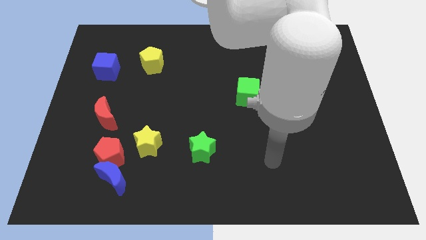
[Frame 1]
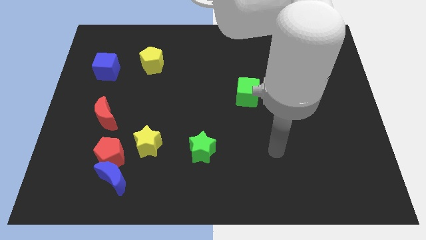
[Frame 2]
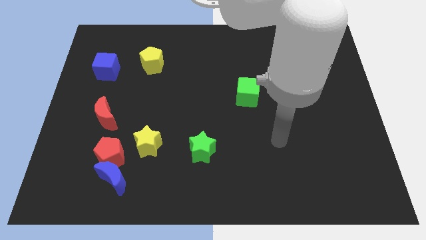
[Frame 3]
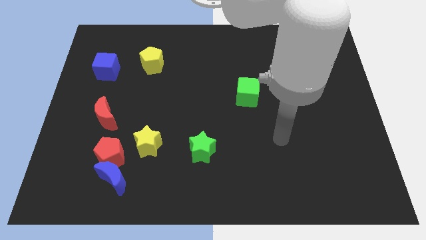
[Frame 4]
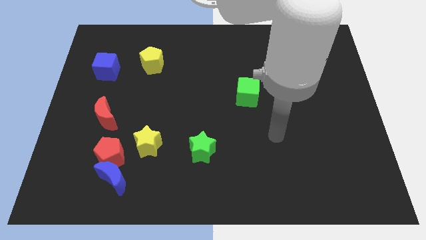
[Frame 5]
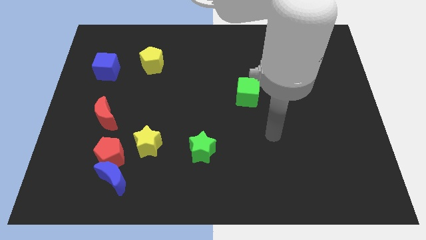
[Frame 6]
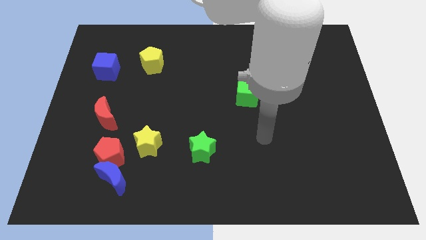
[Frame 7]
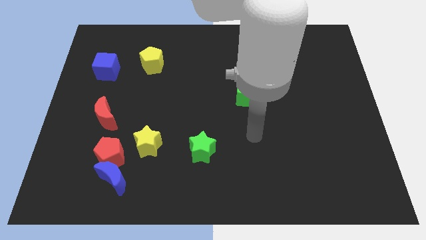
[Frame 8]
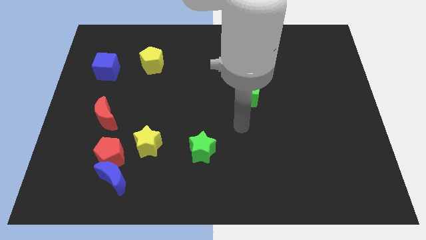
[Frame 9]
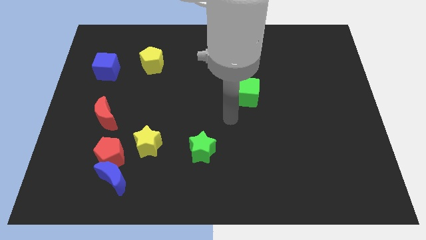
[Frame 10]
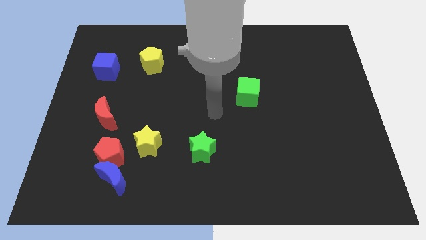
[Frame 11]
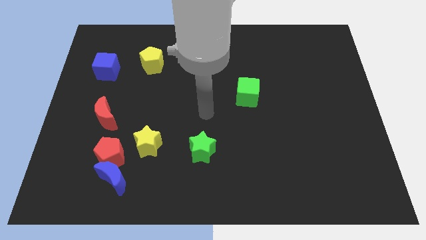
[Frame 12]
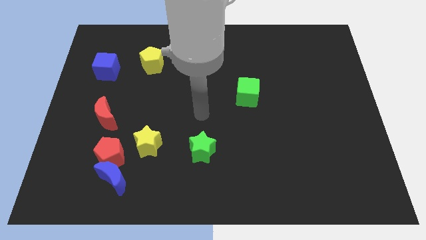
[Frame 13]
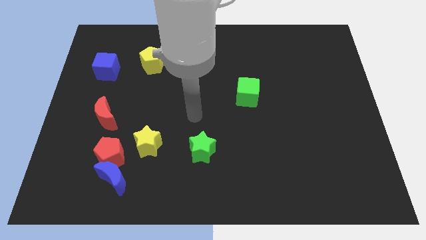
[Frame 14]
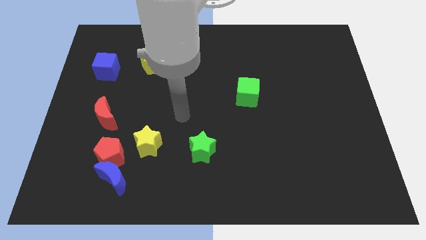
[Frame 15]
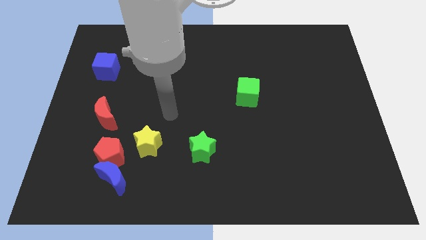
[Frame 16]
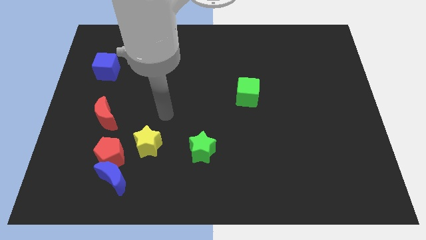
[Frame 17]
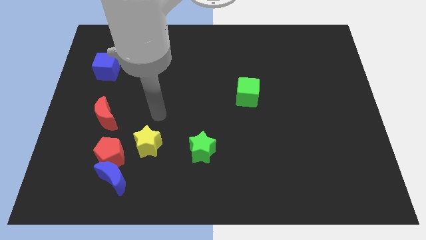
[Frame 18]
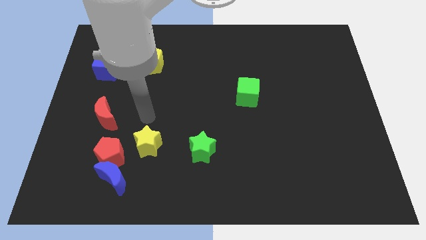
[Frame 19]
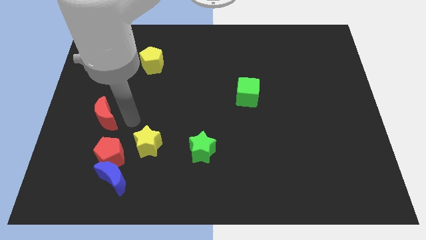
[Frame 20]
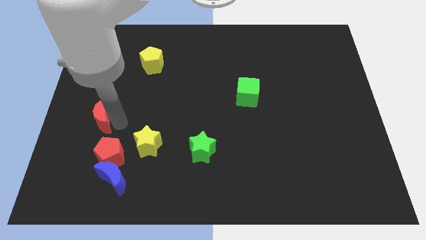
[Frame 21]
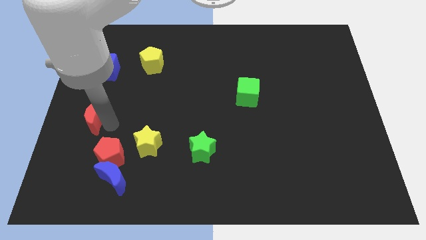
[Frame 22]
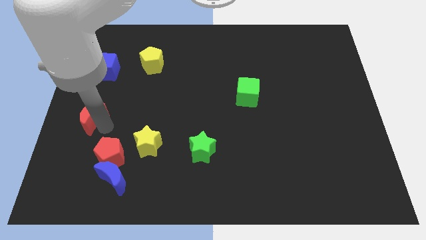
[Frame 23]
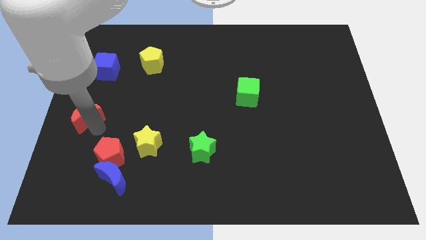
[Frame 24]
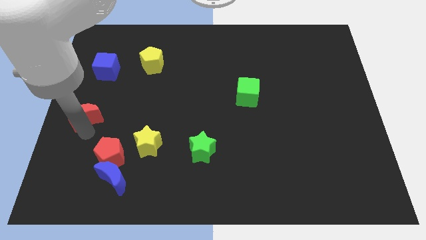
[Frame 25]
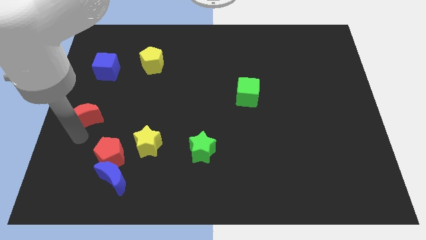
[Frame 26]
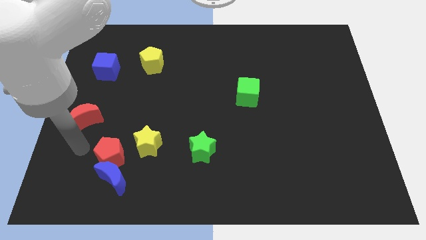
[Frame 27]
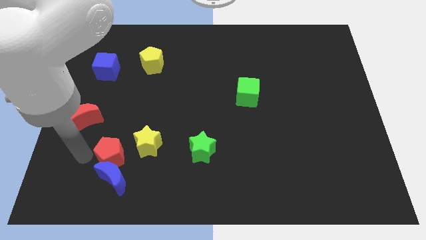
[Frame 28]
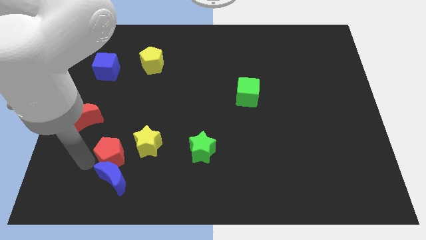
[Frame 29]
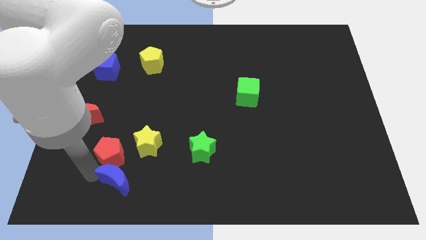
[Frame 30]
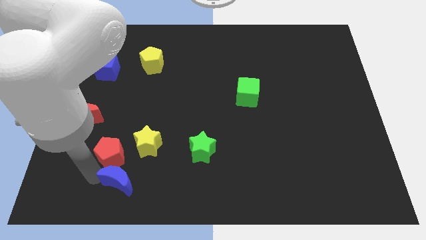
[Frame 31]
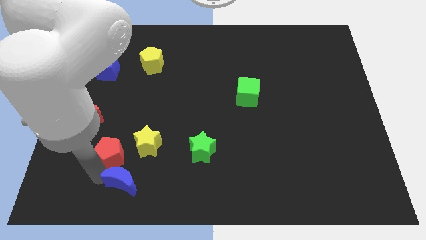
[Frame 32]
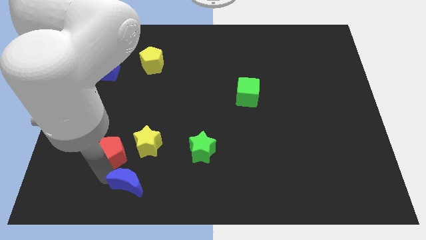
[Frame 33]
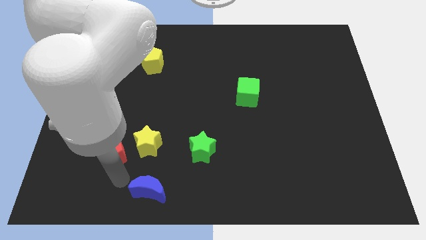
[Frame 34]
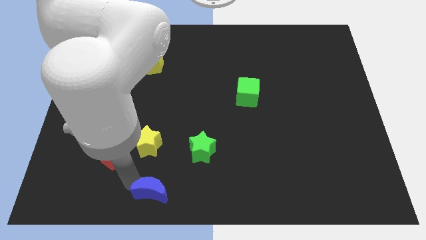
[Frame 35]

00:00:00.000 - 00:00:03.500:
separate blue moon and red pentagon

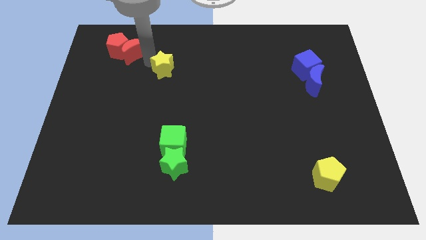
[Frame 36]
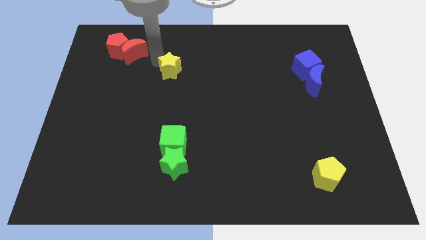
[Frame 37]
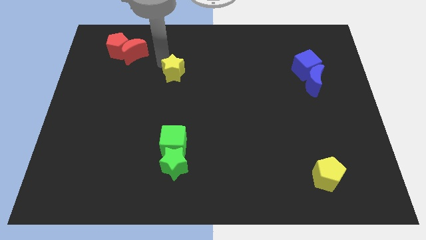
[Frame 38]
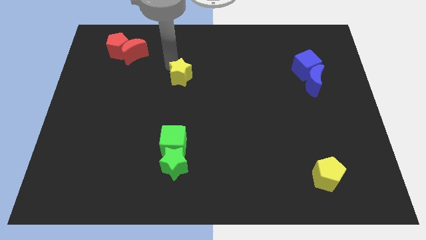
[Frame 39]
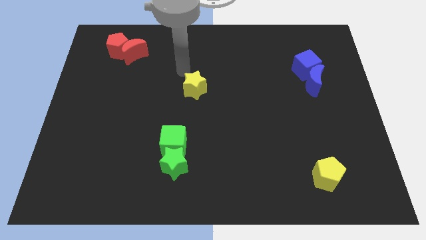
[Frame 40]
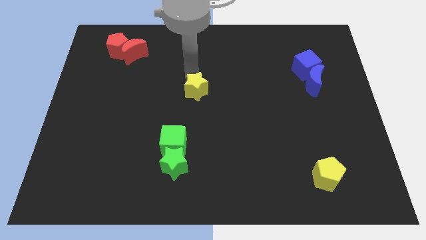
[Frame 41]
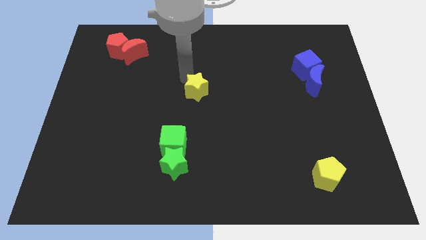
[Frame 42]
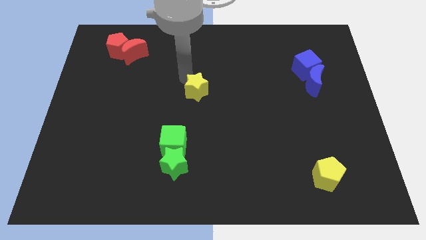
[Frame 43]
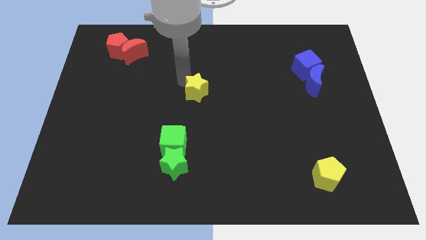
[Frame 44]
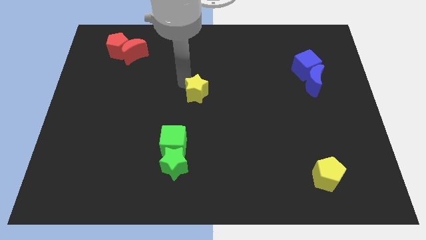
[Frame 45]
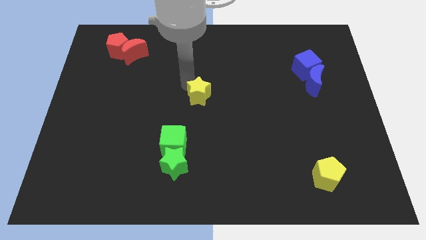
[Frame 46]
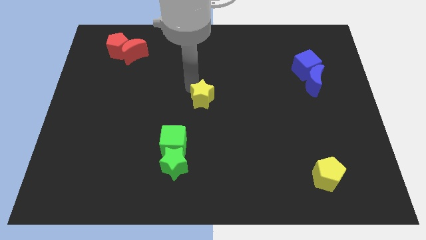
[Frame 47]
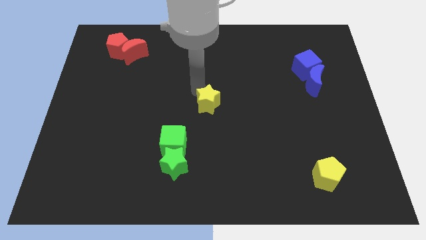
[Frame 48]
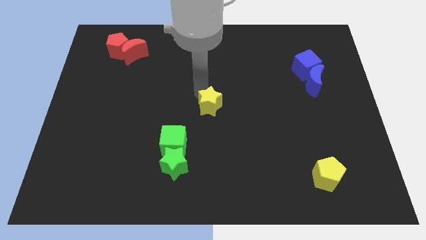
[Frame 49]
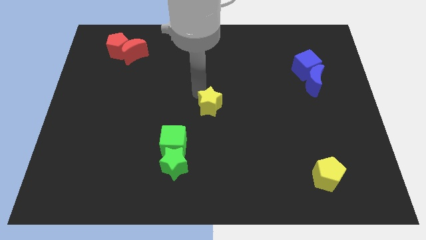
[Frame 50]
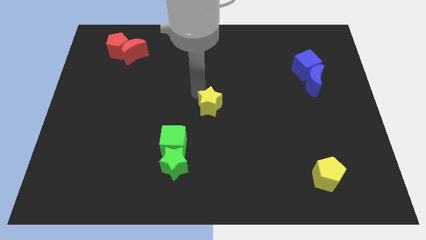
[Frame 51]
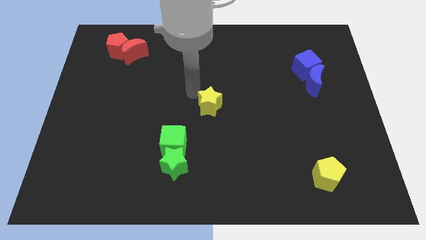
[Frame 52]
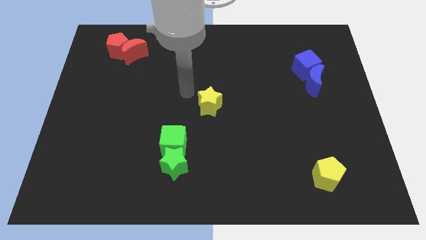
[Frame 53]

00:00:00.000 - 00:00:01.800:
push the yellow star to the centre of the board

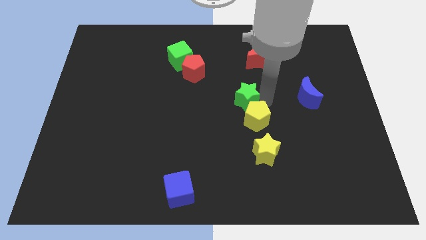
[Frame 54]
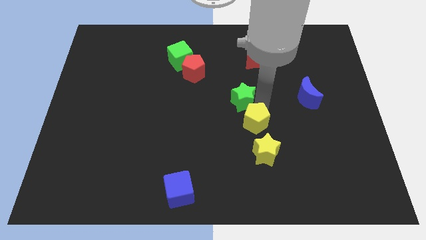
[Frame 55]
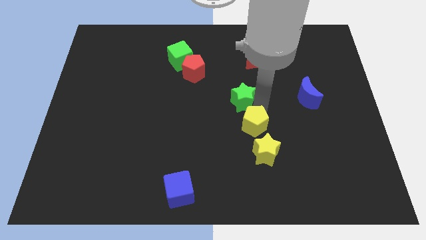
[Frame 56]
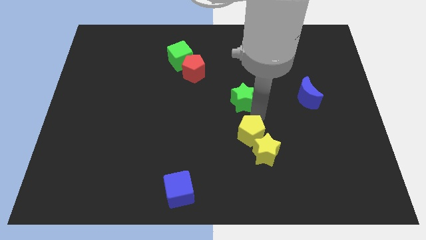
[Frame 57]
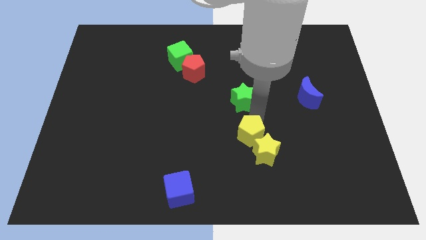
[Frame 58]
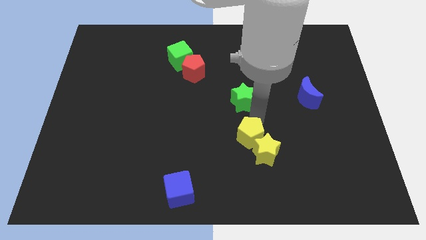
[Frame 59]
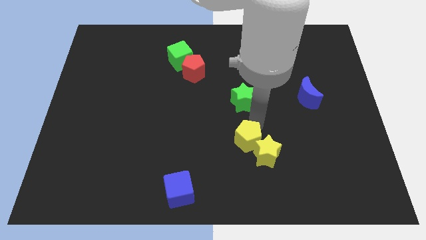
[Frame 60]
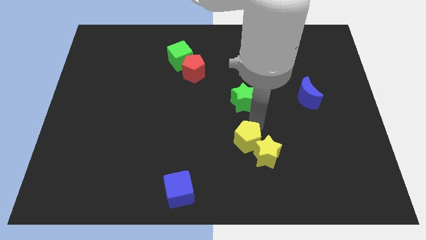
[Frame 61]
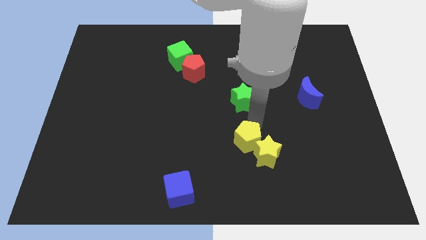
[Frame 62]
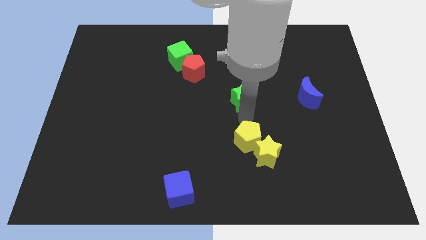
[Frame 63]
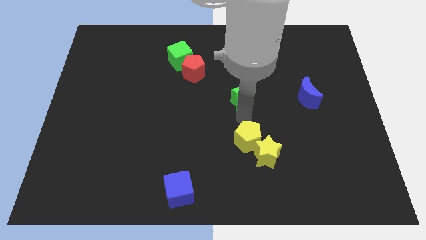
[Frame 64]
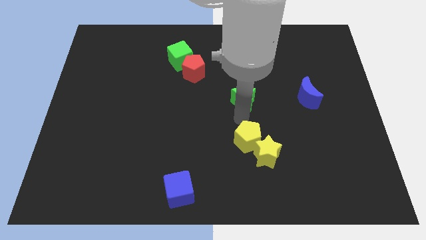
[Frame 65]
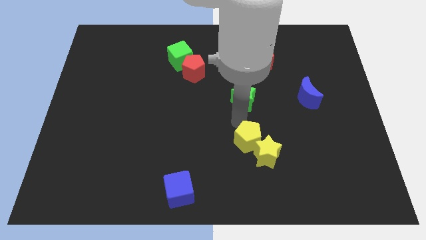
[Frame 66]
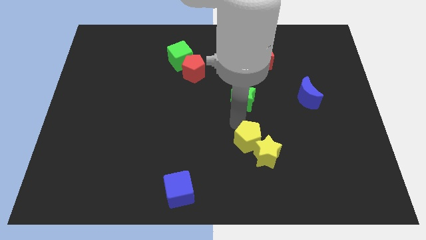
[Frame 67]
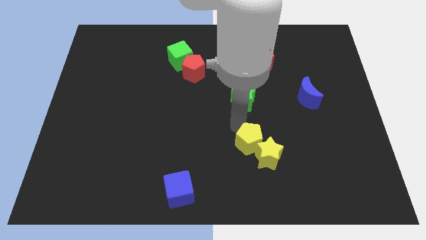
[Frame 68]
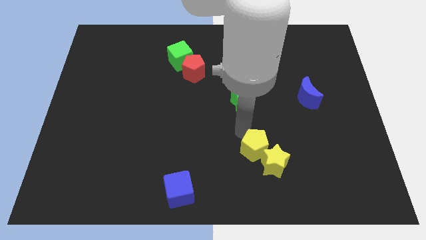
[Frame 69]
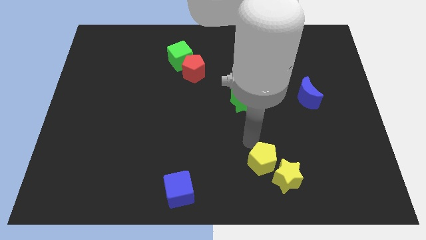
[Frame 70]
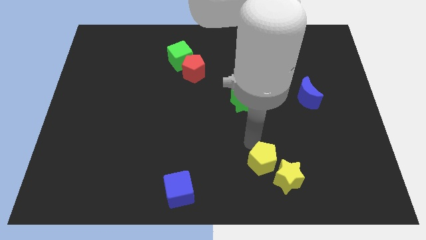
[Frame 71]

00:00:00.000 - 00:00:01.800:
push the yellow pentagon into the yellow star

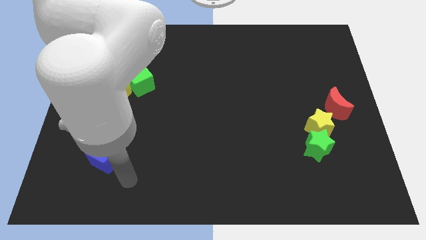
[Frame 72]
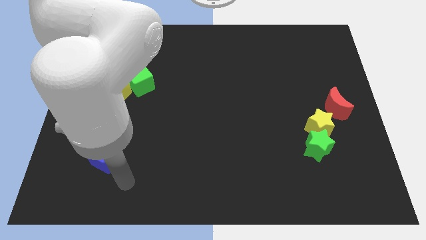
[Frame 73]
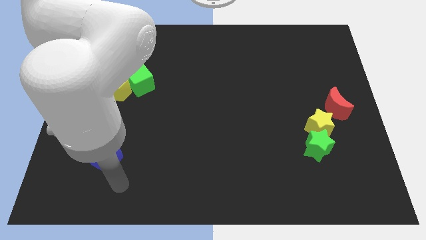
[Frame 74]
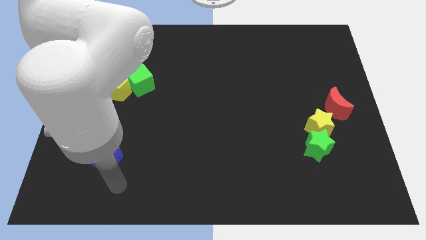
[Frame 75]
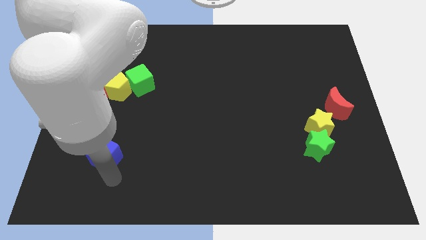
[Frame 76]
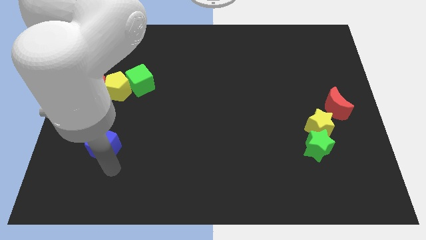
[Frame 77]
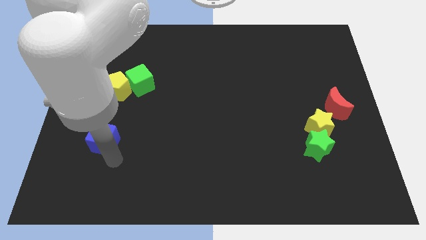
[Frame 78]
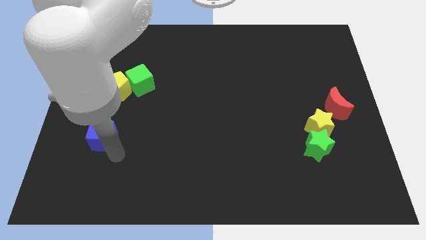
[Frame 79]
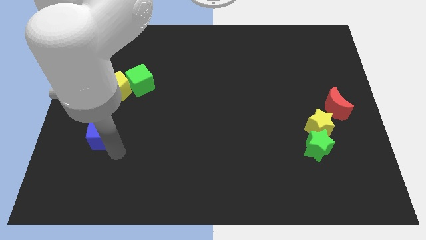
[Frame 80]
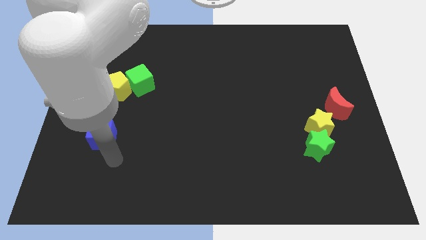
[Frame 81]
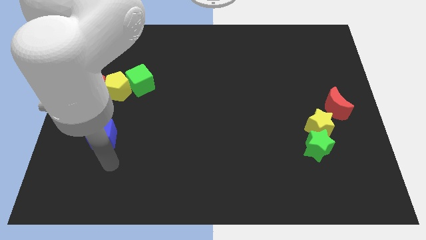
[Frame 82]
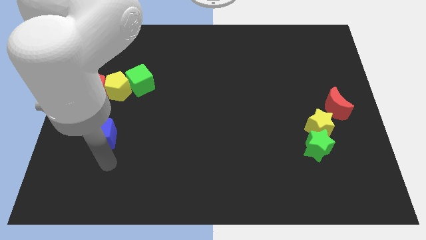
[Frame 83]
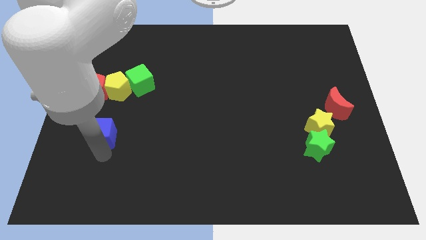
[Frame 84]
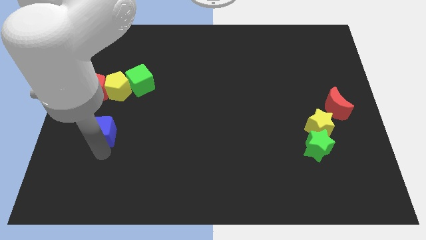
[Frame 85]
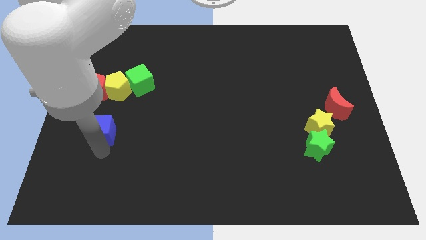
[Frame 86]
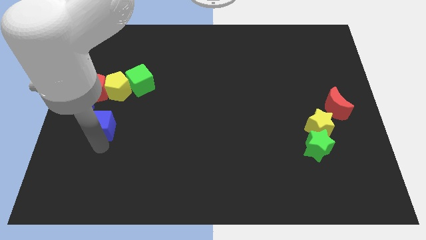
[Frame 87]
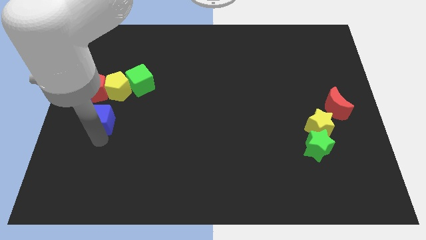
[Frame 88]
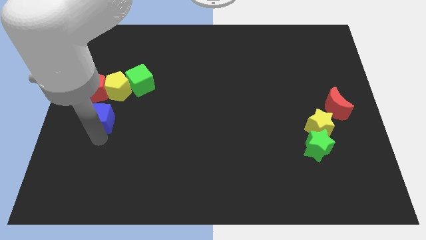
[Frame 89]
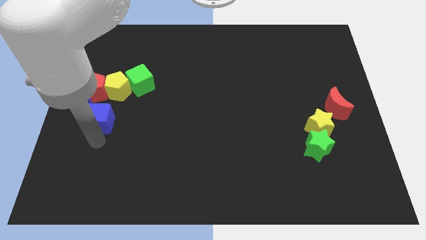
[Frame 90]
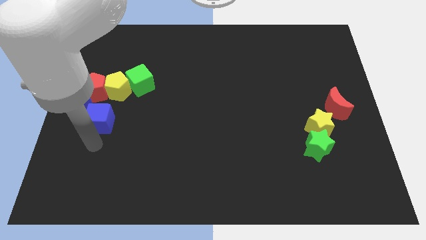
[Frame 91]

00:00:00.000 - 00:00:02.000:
drag the blue cube towards the red pentagon
